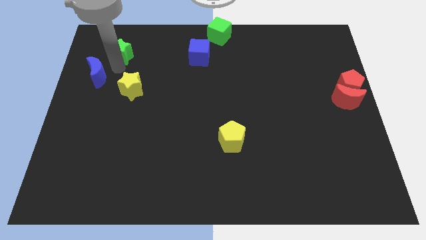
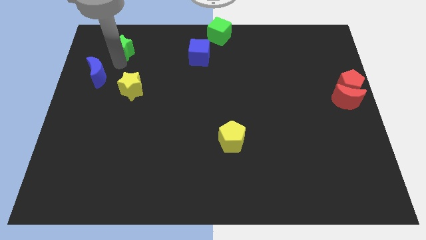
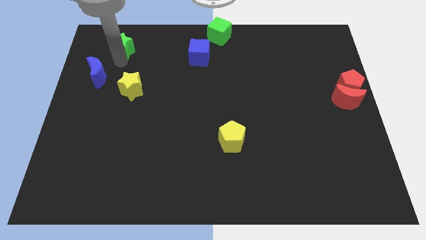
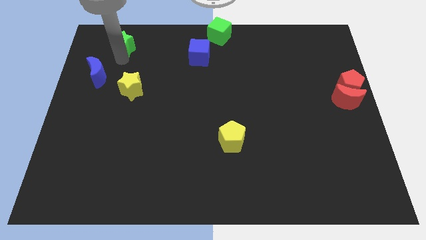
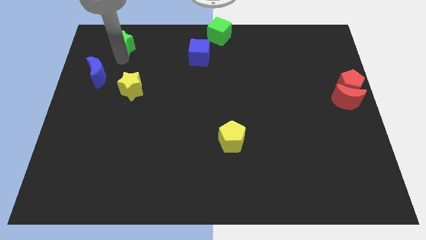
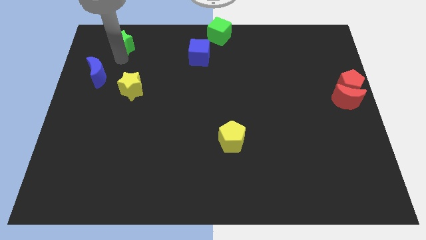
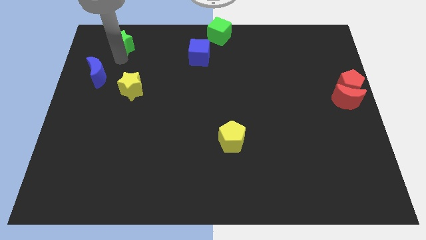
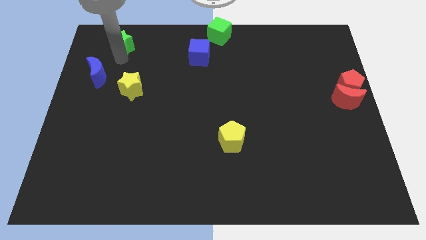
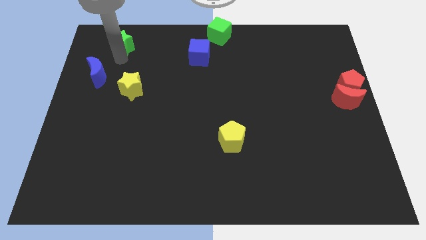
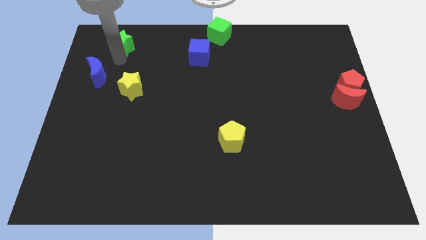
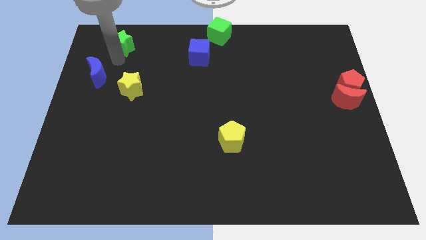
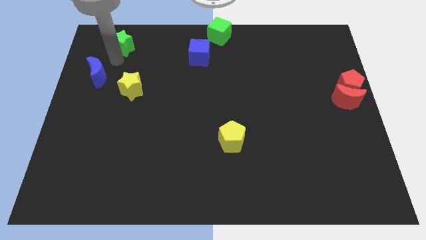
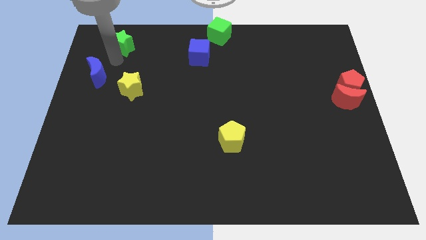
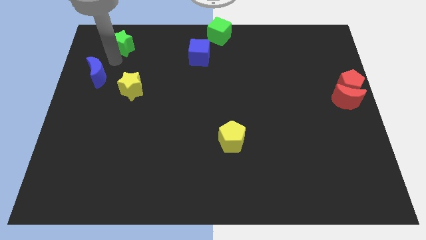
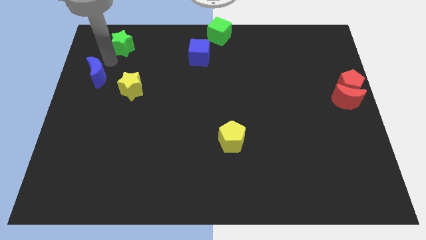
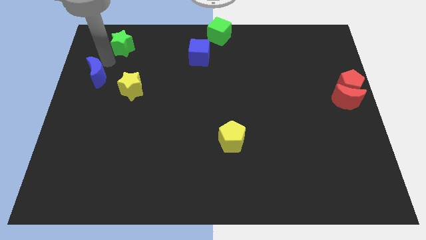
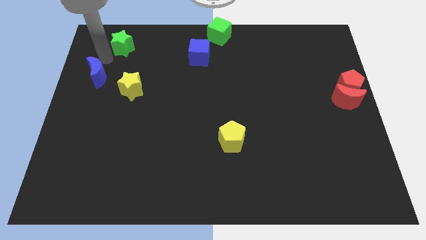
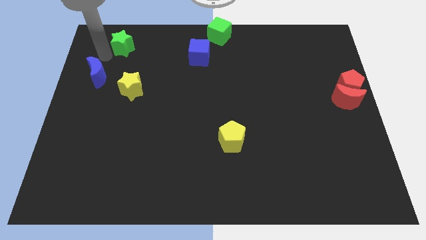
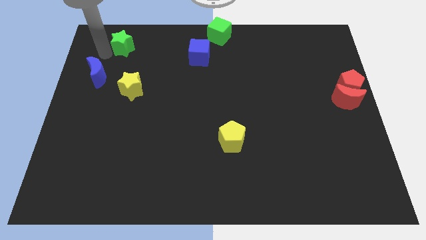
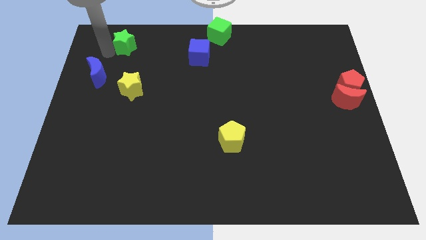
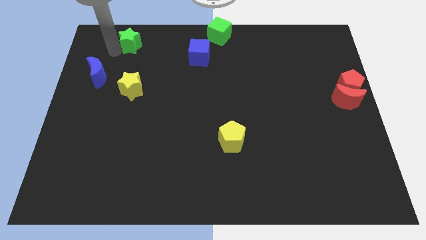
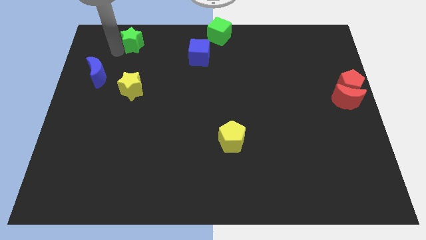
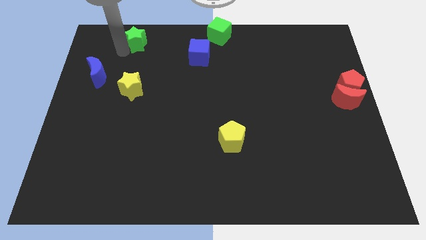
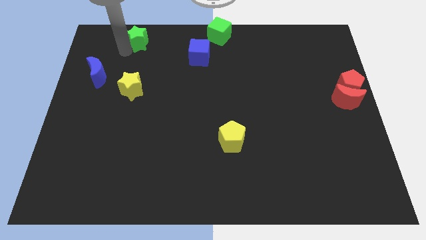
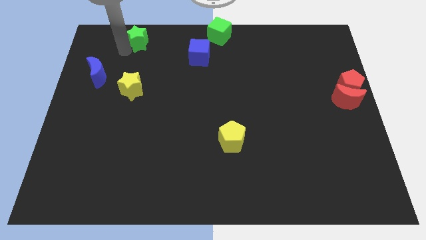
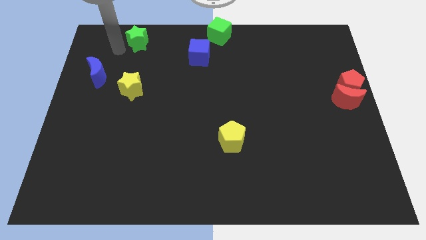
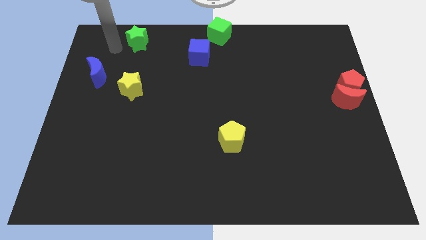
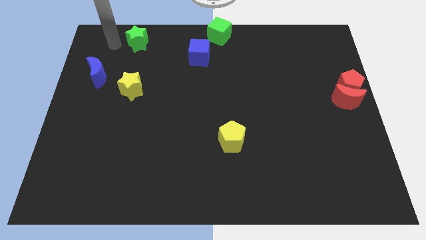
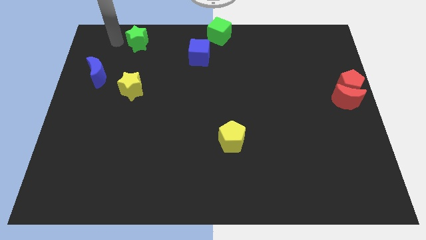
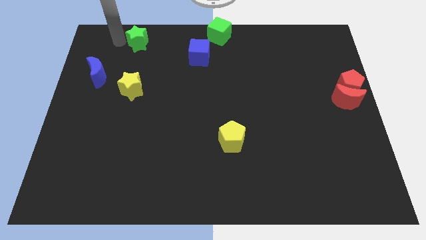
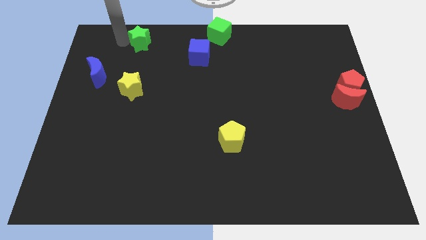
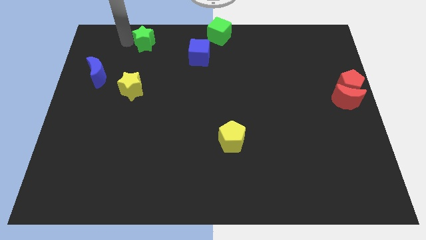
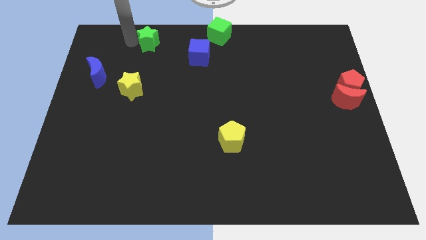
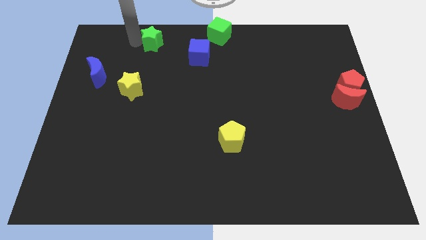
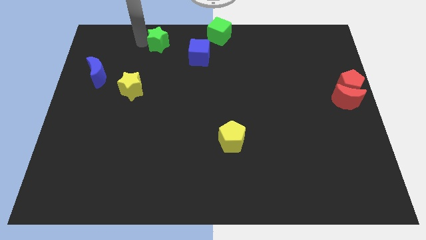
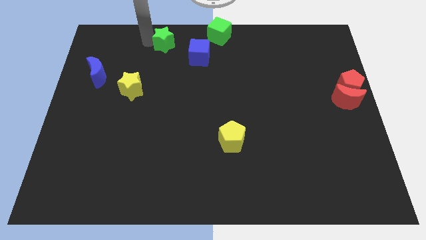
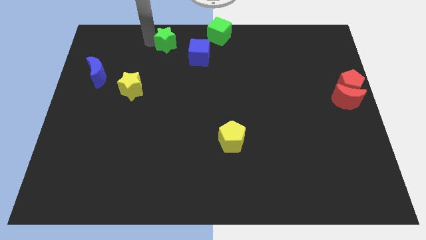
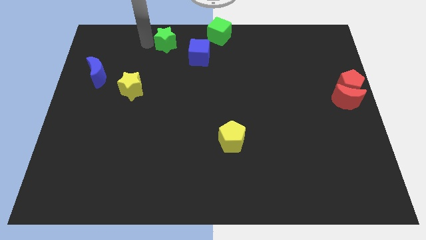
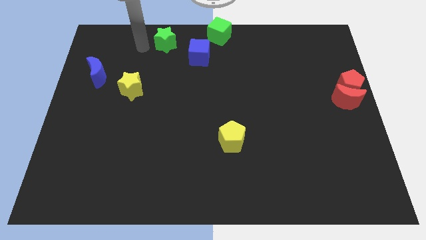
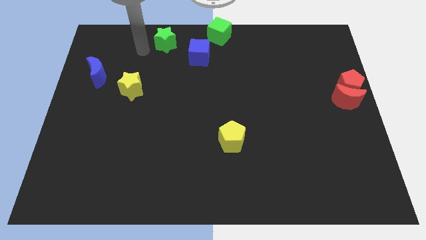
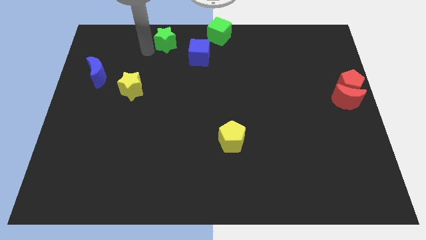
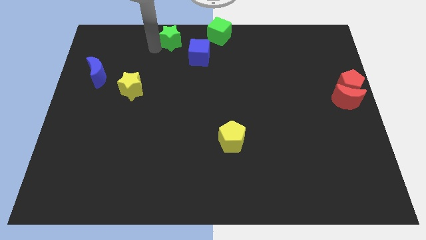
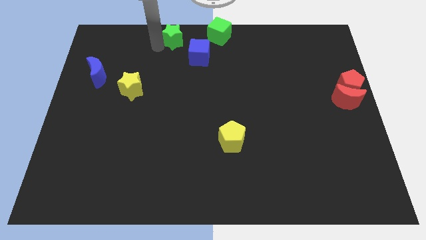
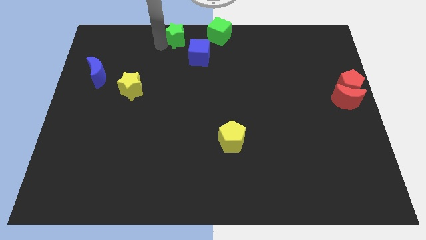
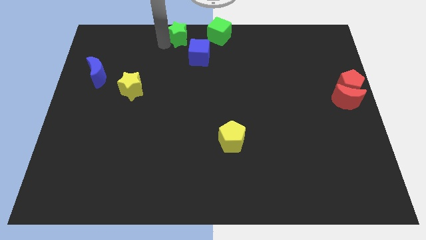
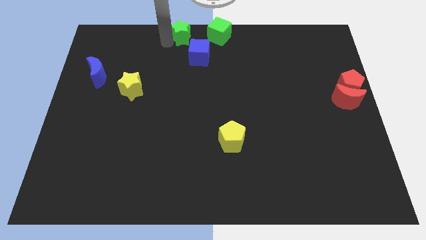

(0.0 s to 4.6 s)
push the green star to the top left of the blue cube

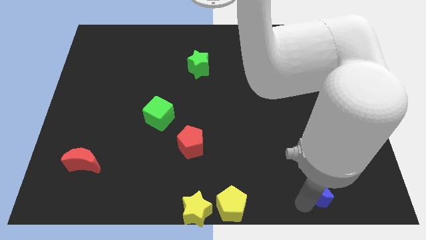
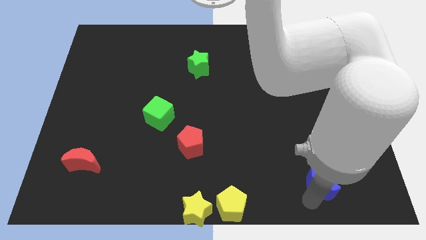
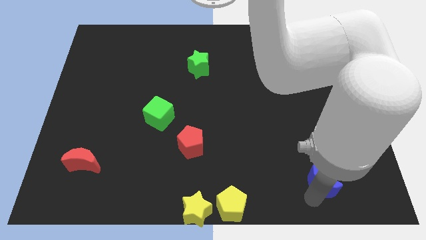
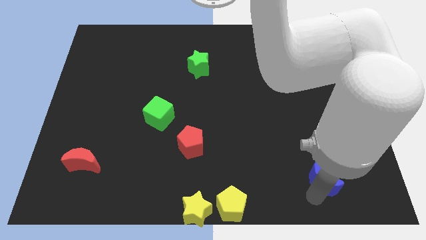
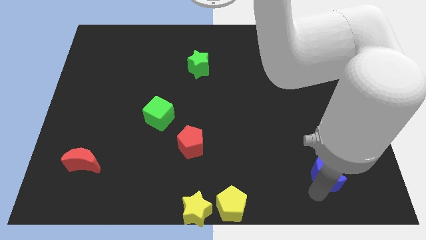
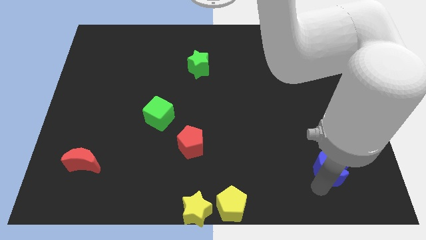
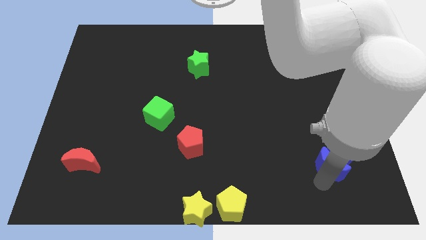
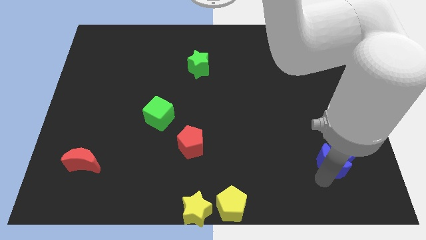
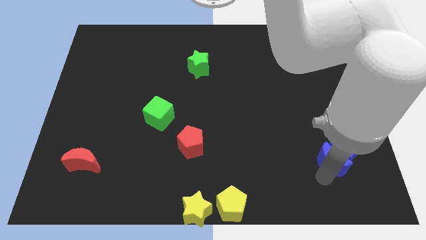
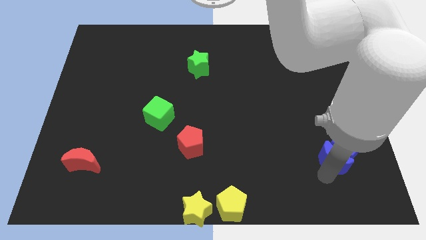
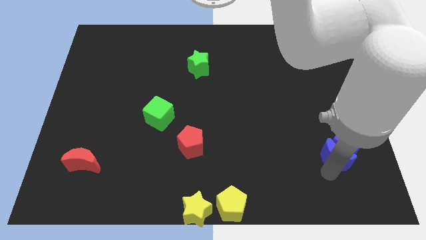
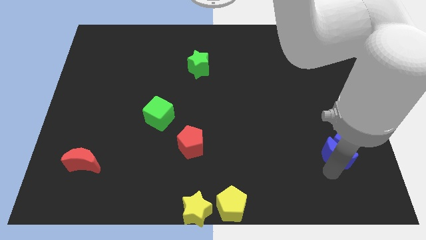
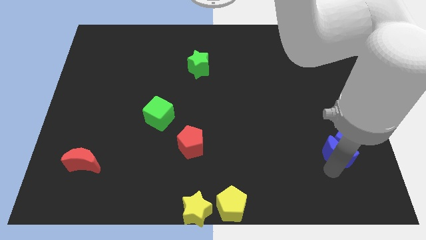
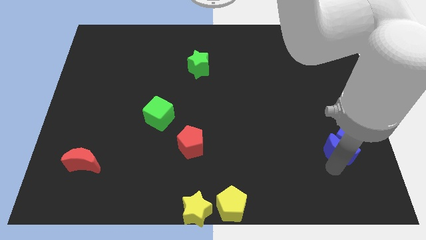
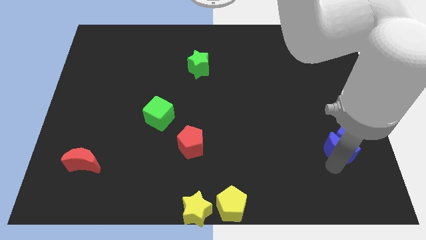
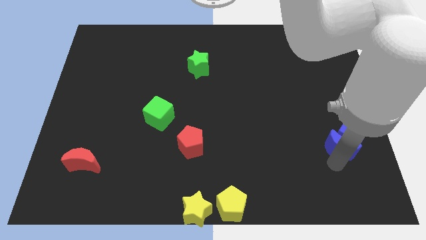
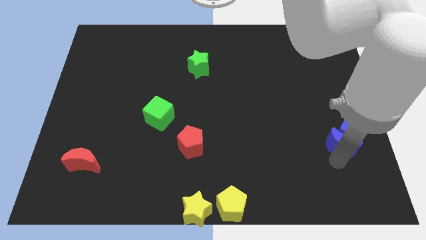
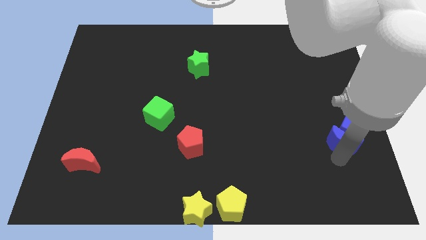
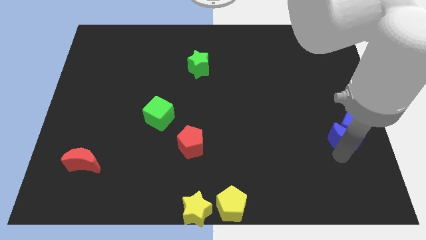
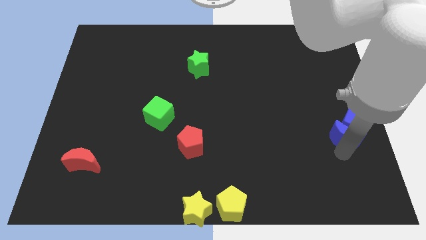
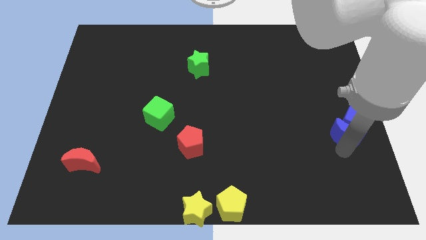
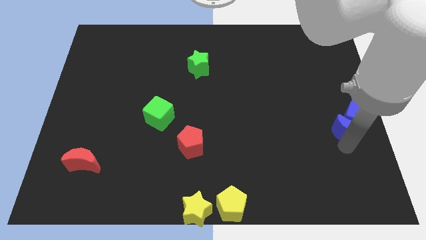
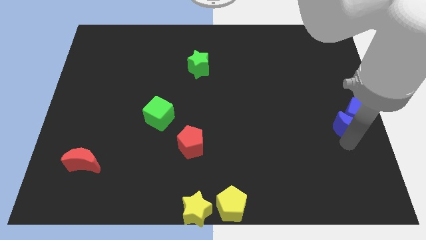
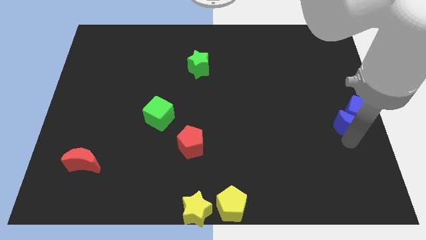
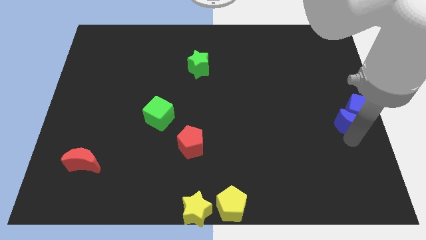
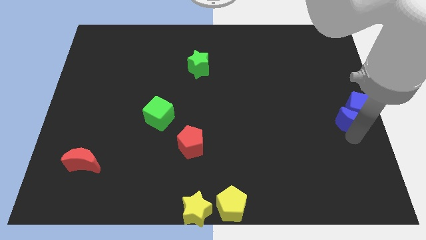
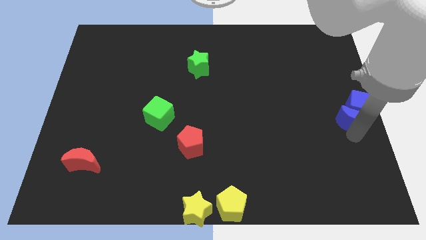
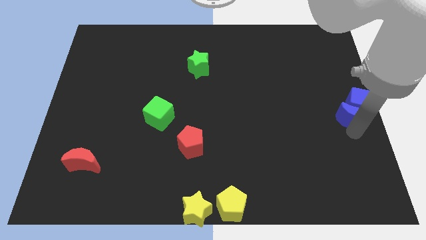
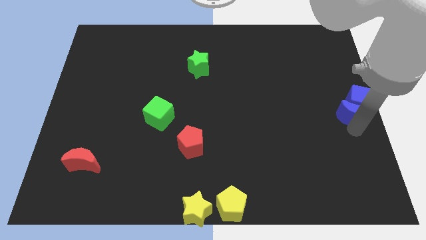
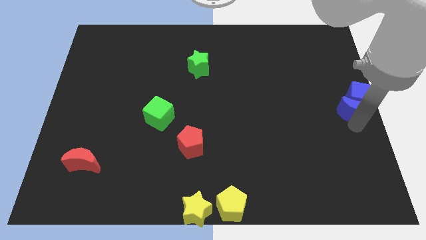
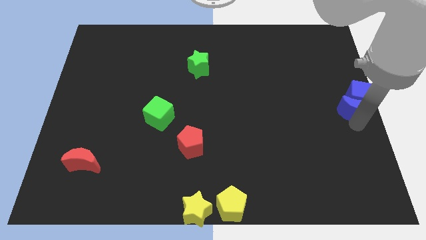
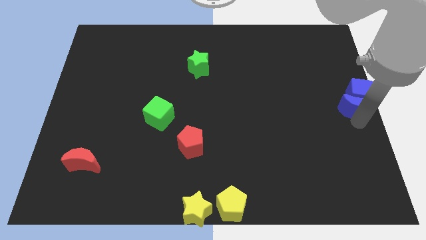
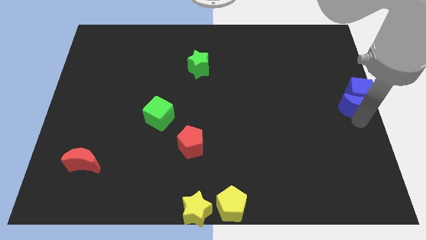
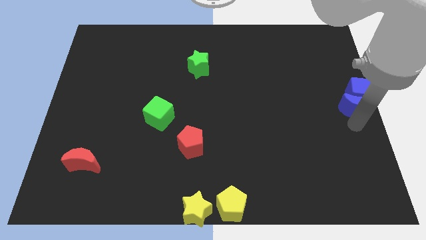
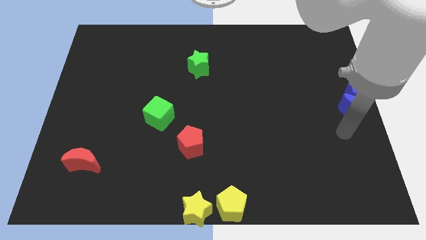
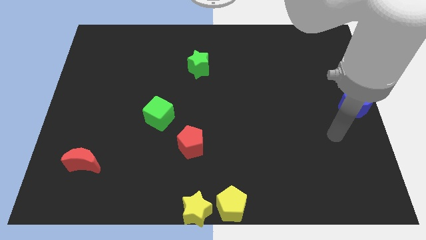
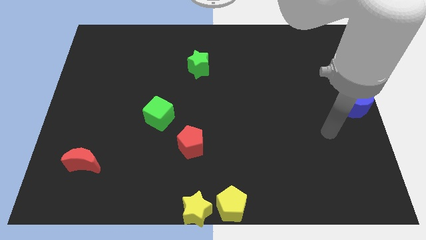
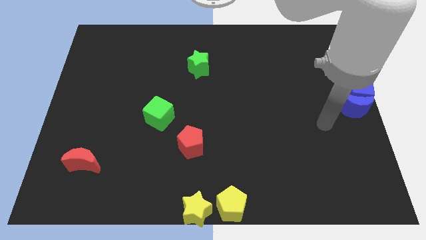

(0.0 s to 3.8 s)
push the blue blocks towards the right center side

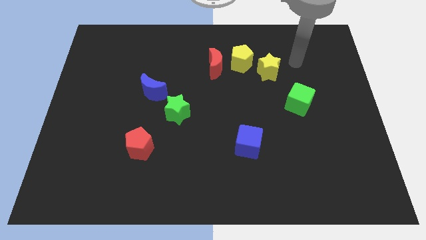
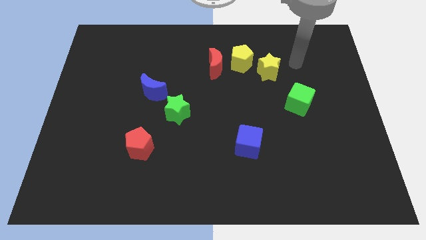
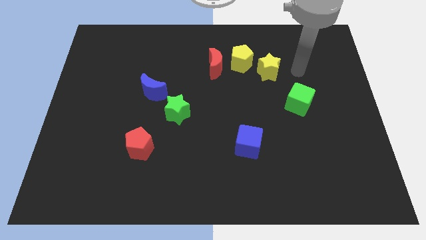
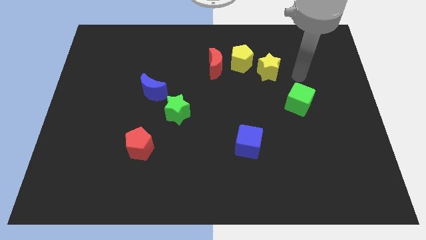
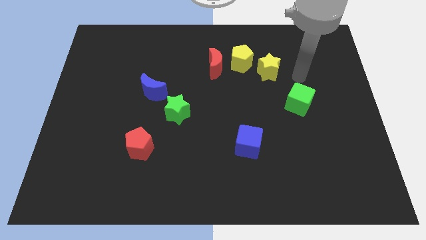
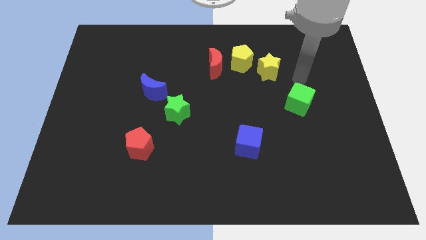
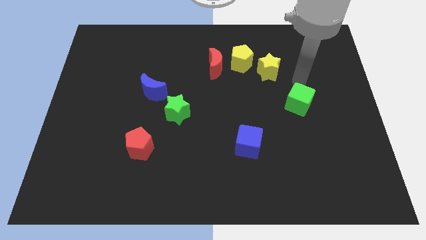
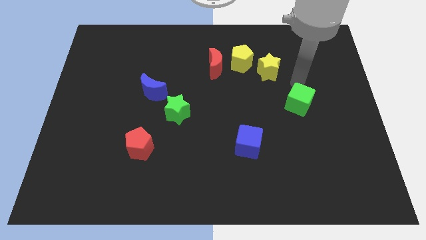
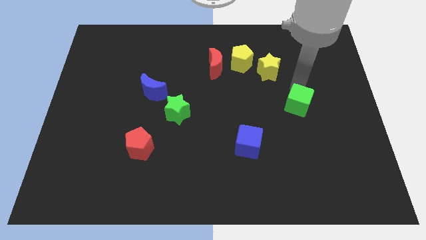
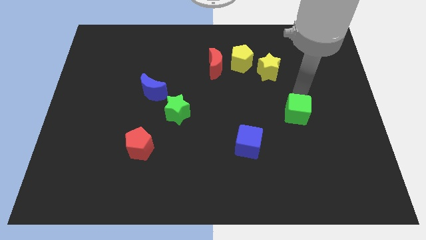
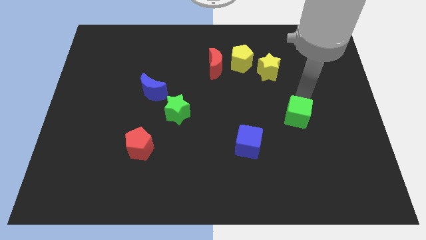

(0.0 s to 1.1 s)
move the green cube slightly to the down
